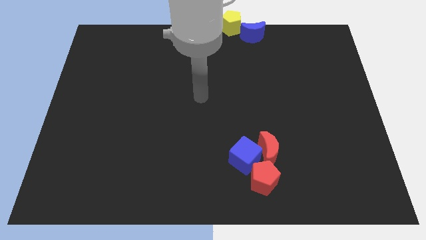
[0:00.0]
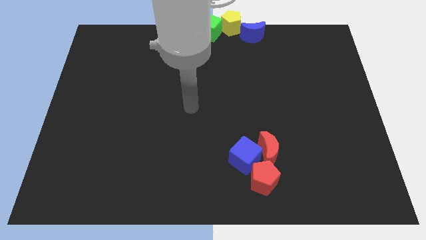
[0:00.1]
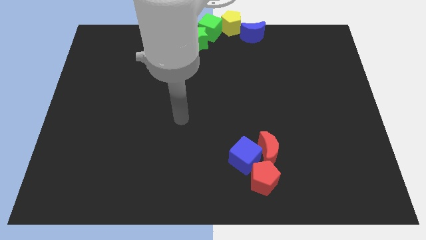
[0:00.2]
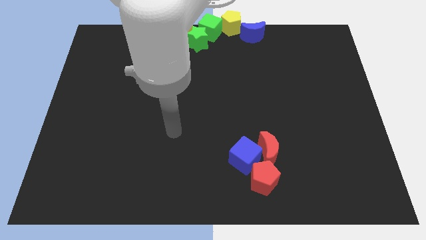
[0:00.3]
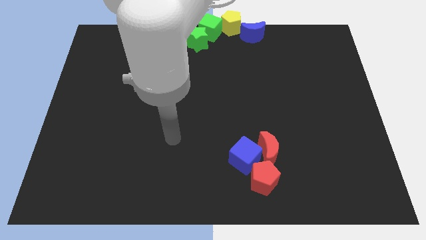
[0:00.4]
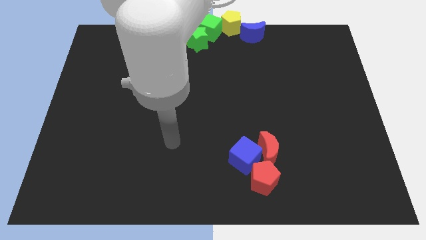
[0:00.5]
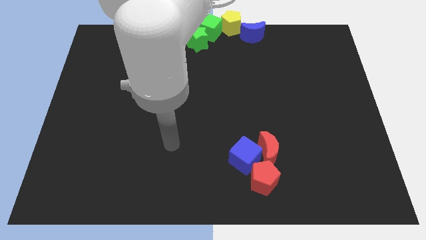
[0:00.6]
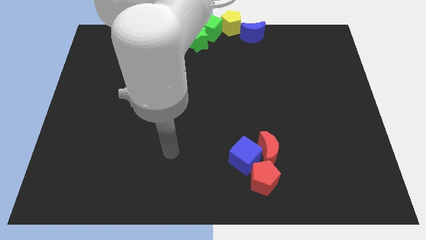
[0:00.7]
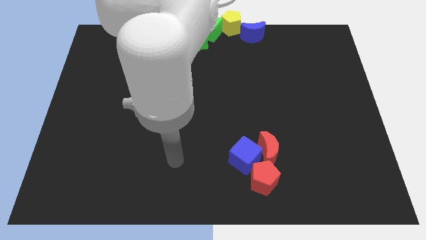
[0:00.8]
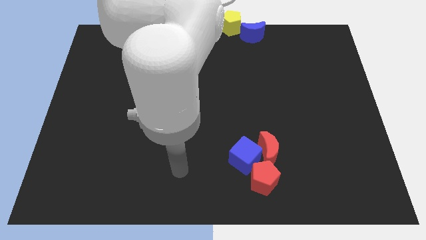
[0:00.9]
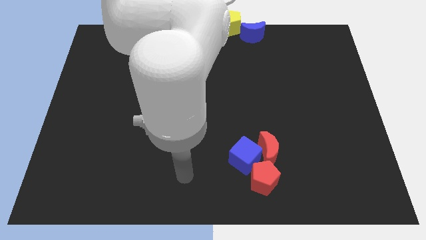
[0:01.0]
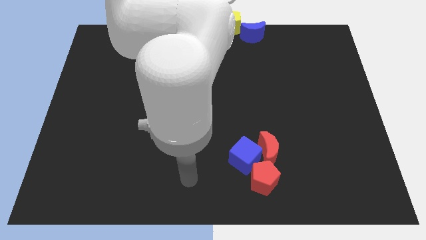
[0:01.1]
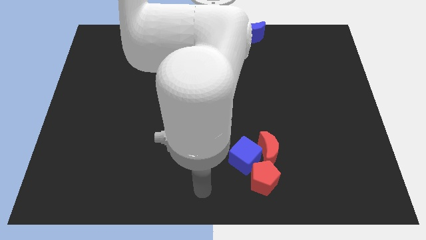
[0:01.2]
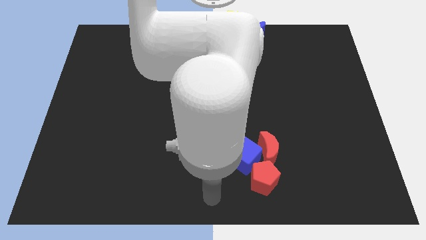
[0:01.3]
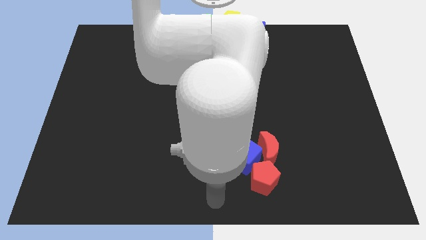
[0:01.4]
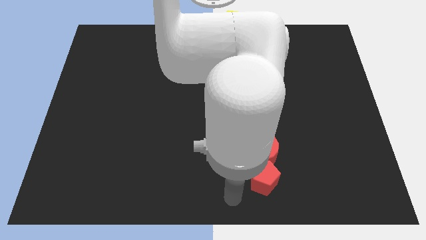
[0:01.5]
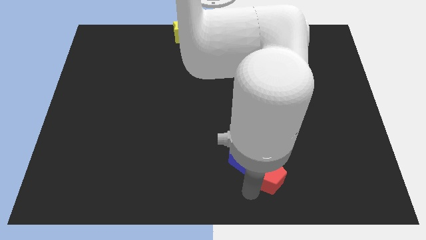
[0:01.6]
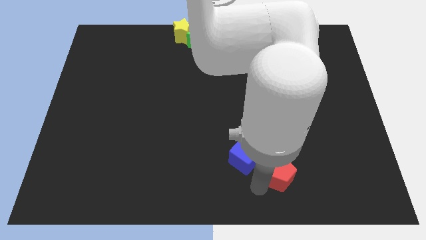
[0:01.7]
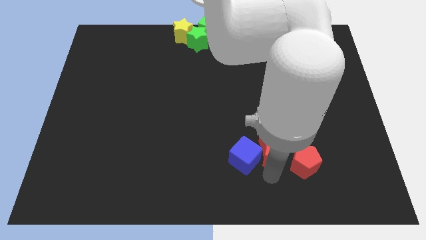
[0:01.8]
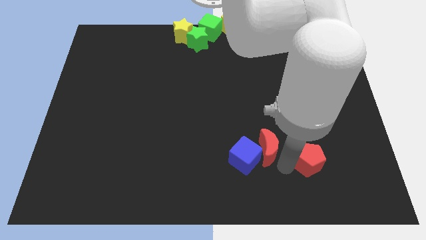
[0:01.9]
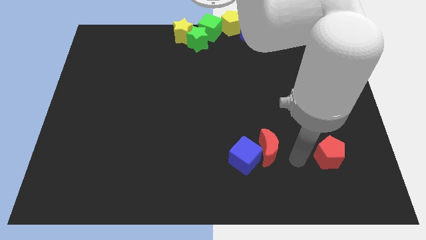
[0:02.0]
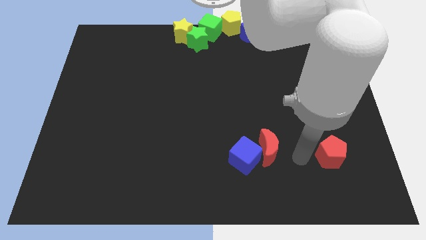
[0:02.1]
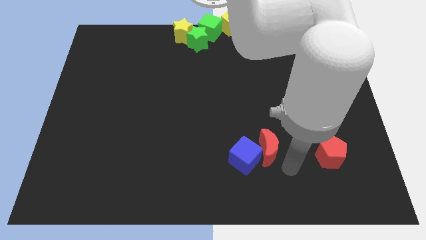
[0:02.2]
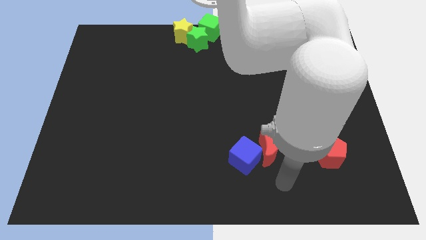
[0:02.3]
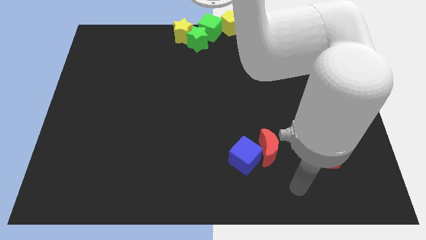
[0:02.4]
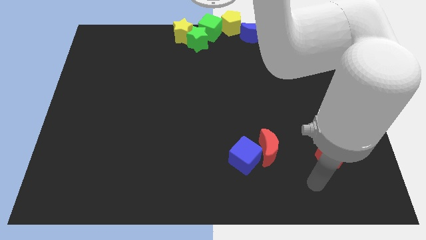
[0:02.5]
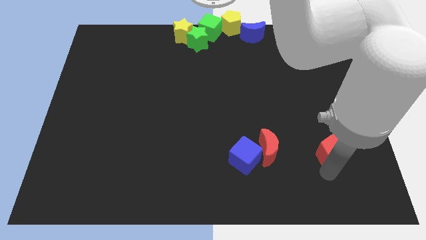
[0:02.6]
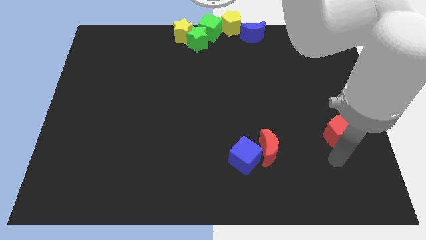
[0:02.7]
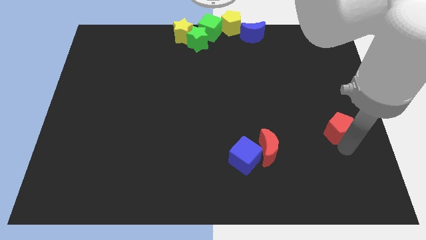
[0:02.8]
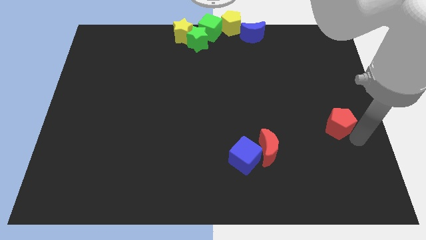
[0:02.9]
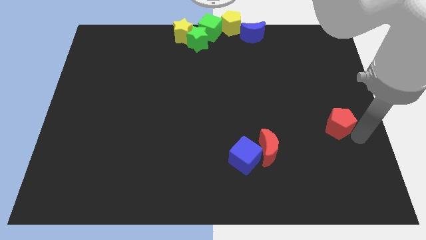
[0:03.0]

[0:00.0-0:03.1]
move the red pentagon away from the red moon

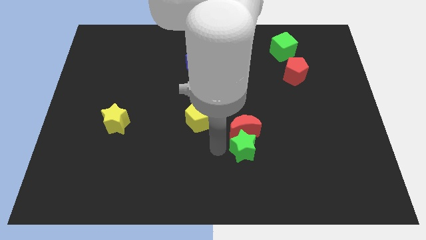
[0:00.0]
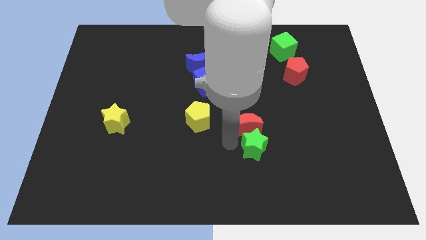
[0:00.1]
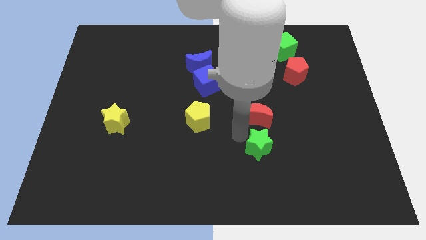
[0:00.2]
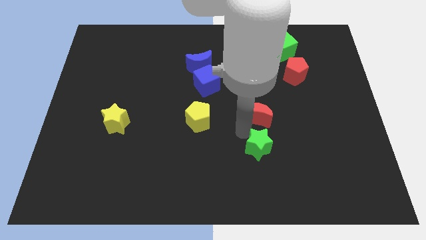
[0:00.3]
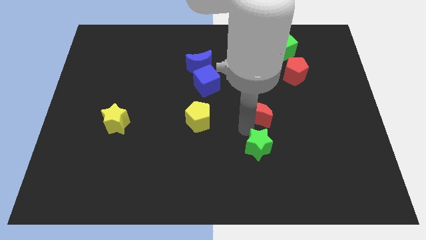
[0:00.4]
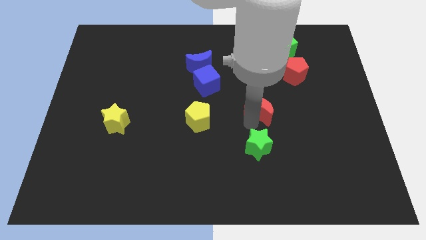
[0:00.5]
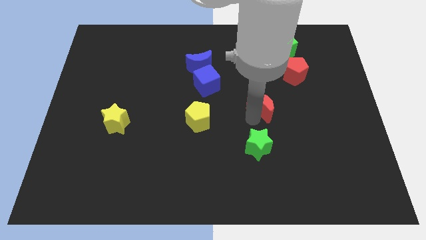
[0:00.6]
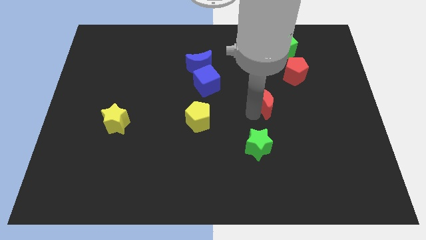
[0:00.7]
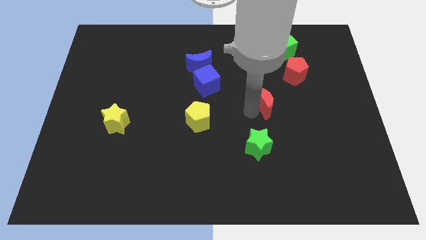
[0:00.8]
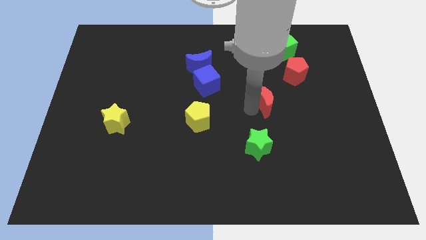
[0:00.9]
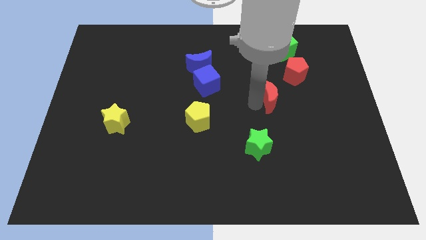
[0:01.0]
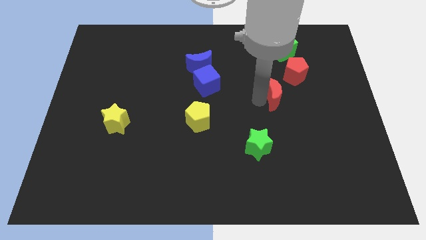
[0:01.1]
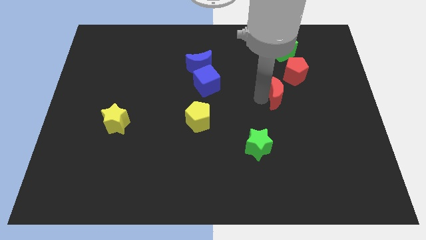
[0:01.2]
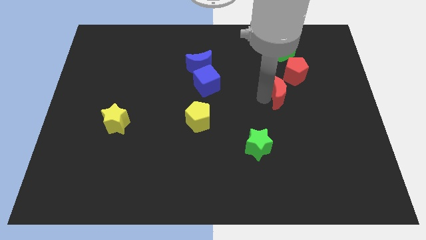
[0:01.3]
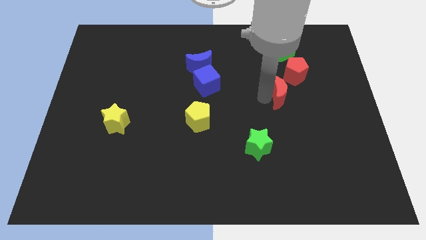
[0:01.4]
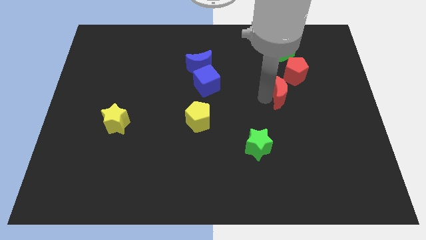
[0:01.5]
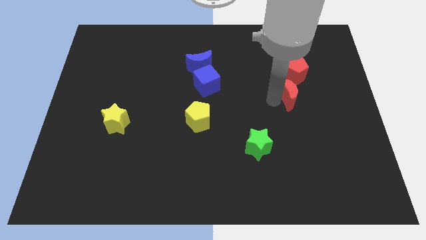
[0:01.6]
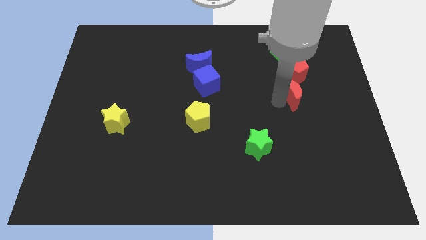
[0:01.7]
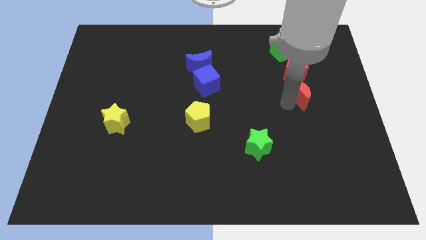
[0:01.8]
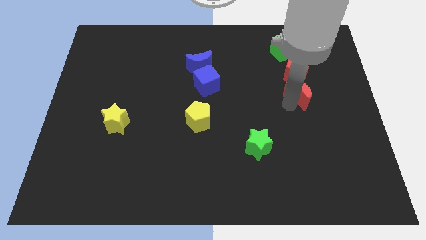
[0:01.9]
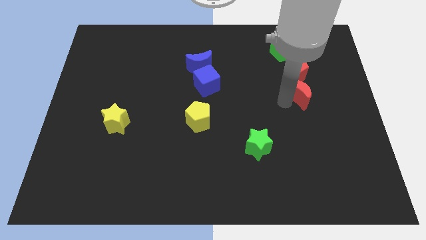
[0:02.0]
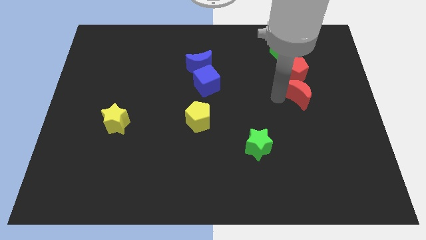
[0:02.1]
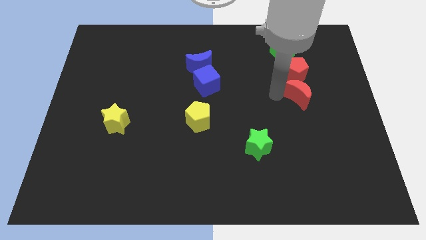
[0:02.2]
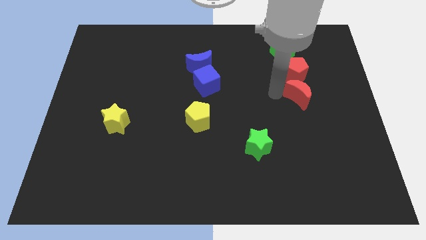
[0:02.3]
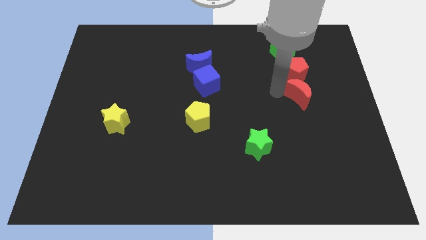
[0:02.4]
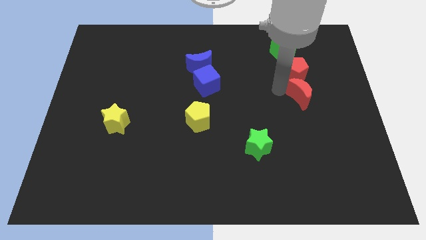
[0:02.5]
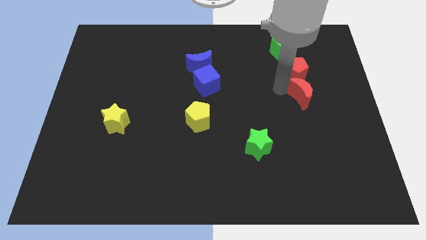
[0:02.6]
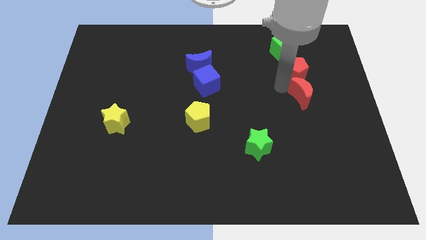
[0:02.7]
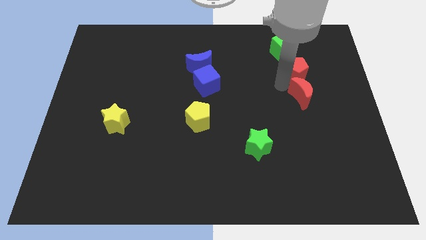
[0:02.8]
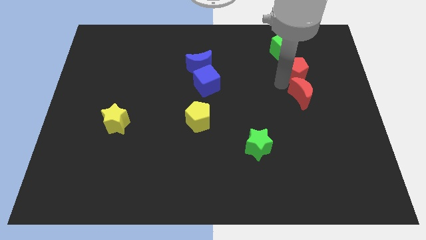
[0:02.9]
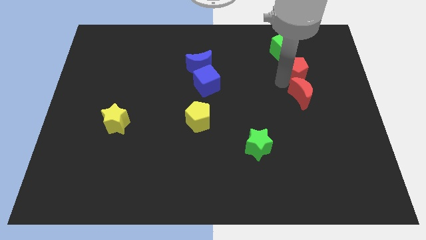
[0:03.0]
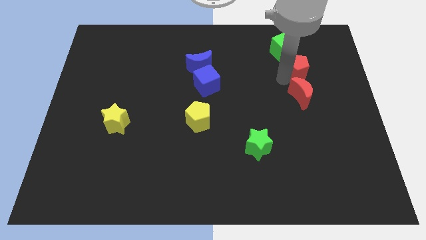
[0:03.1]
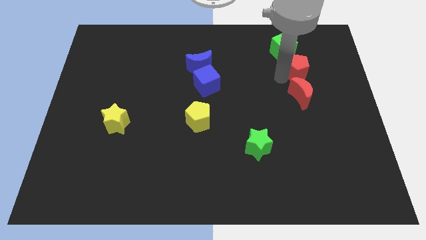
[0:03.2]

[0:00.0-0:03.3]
separate red moon from the green star

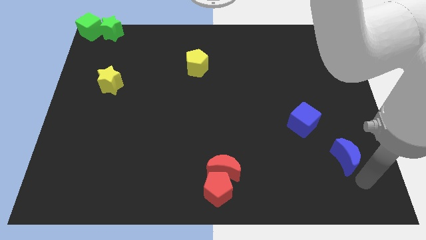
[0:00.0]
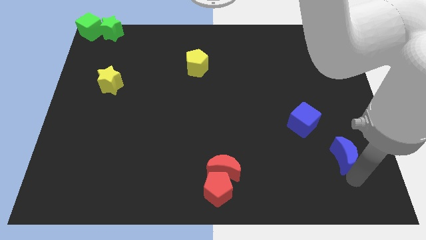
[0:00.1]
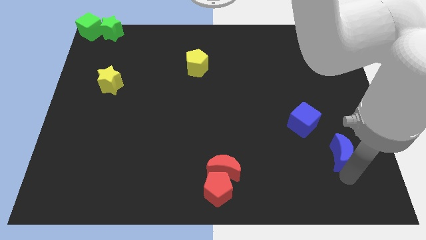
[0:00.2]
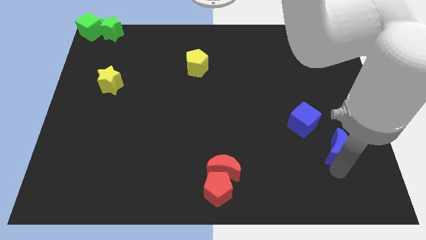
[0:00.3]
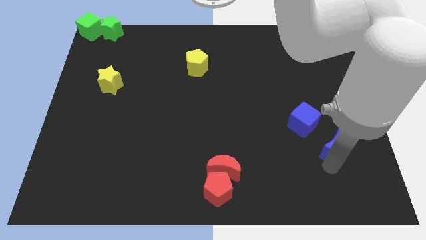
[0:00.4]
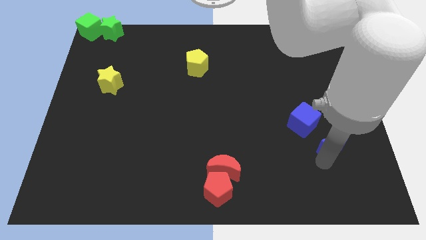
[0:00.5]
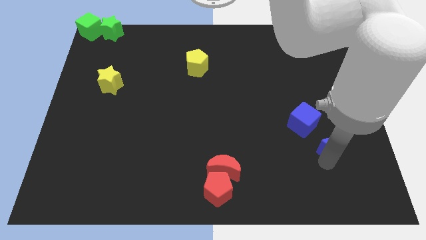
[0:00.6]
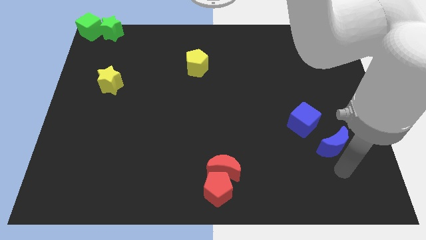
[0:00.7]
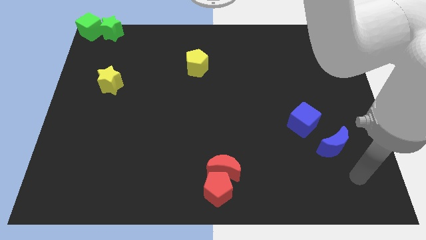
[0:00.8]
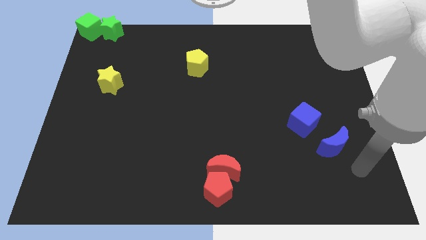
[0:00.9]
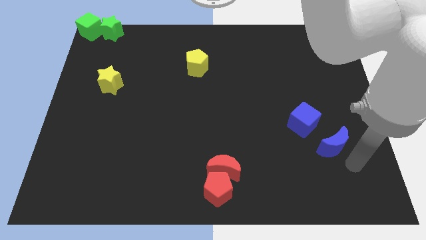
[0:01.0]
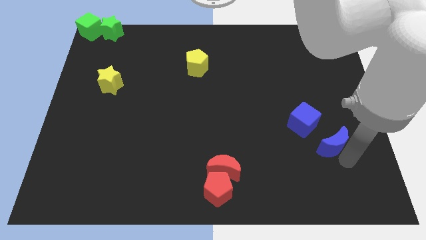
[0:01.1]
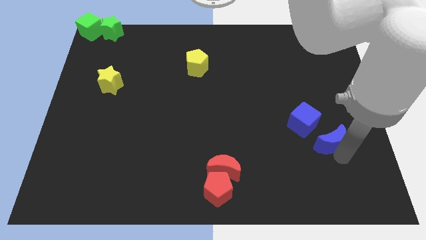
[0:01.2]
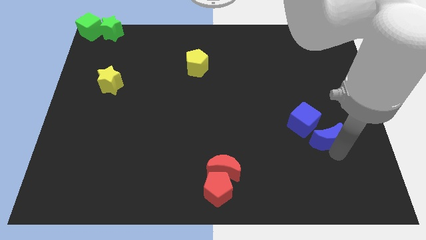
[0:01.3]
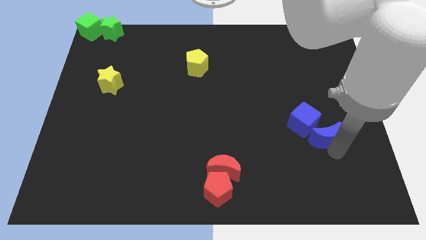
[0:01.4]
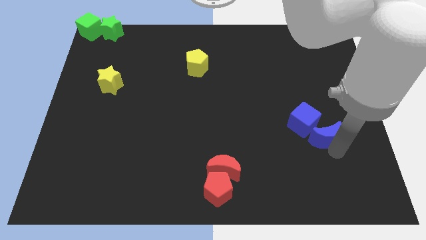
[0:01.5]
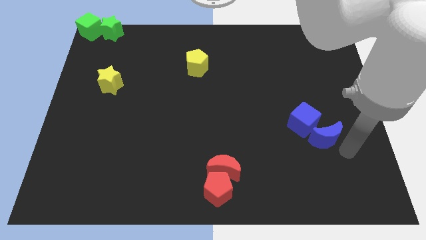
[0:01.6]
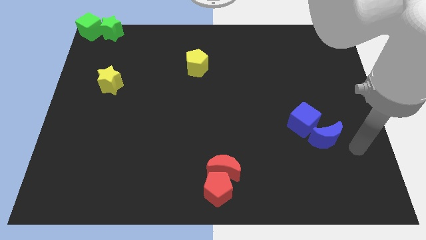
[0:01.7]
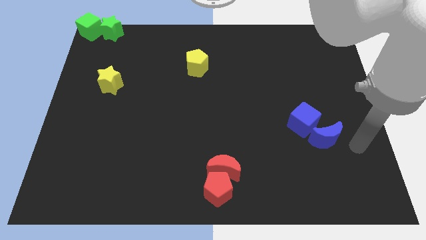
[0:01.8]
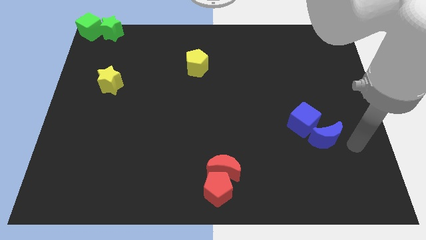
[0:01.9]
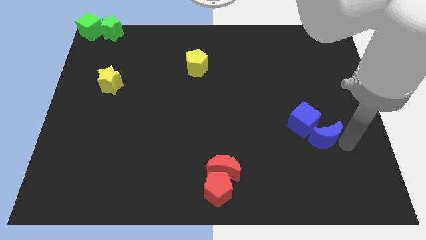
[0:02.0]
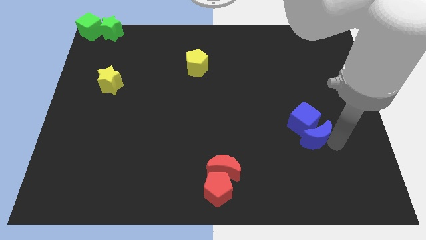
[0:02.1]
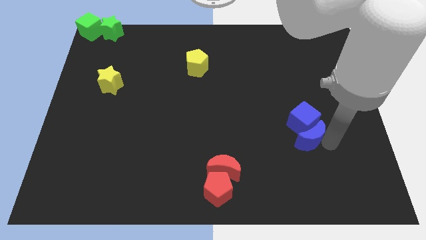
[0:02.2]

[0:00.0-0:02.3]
push blue crescent below blue cube
